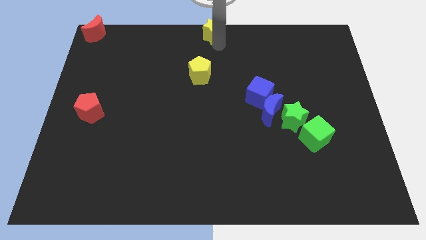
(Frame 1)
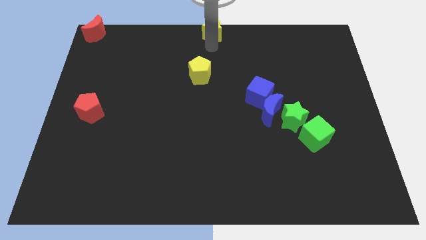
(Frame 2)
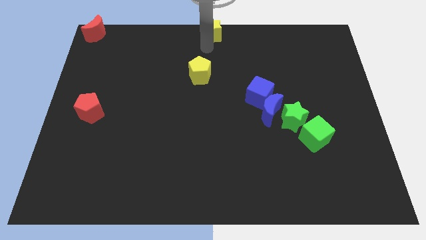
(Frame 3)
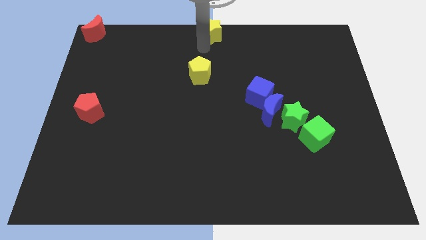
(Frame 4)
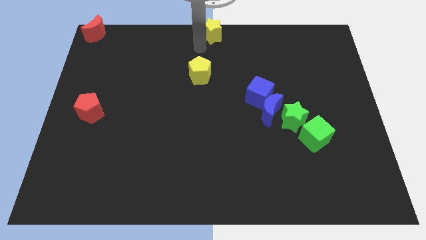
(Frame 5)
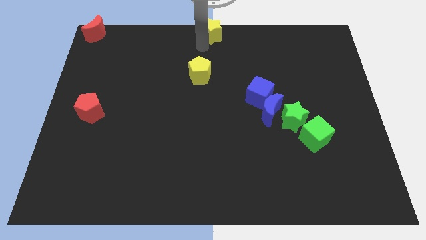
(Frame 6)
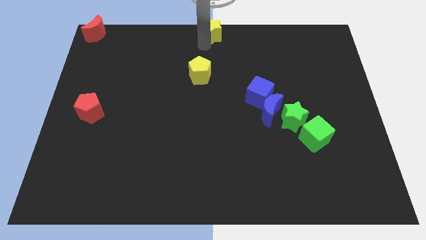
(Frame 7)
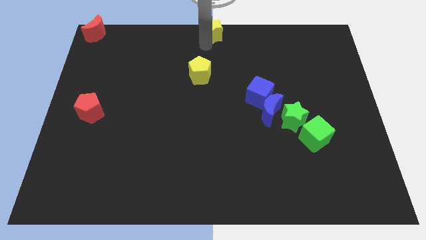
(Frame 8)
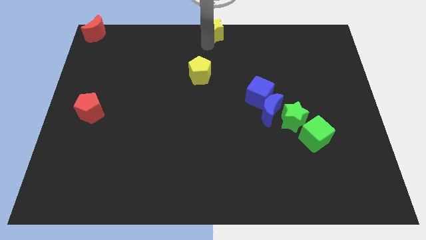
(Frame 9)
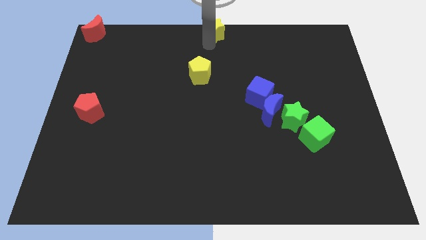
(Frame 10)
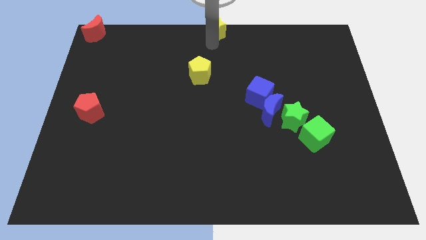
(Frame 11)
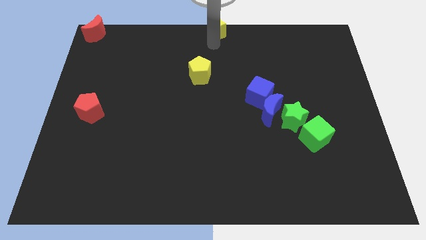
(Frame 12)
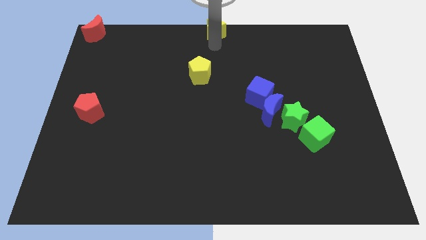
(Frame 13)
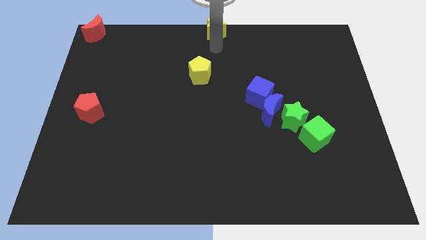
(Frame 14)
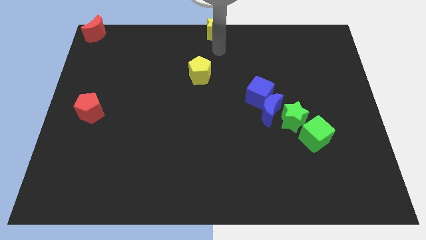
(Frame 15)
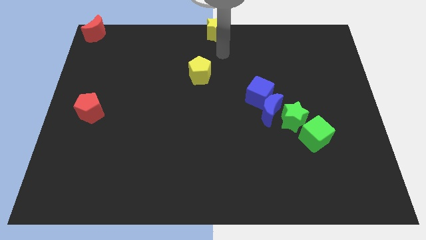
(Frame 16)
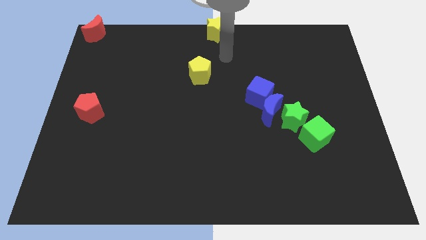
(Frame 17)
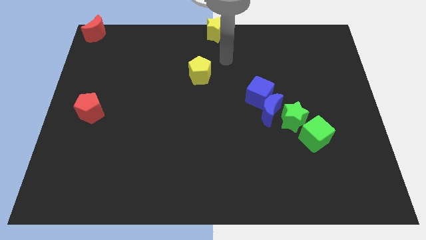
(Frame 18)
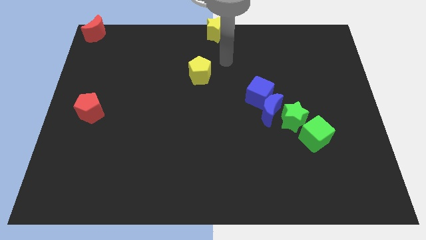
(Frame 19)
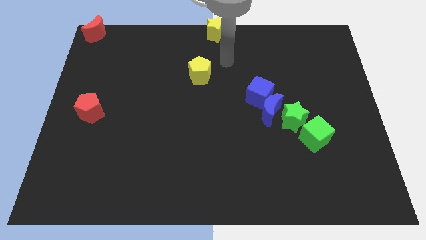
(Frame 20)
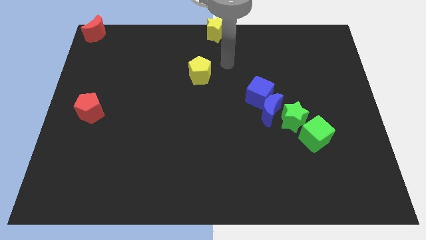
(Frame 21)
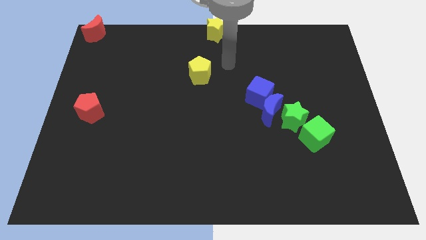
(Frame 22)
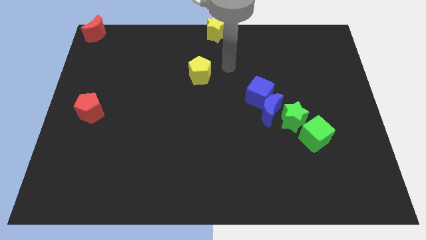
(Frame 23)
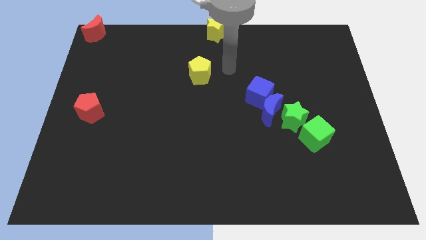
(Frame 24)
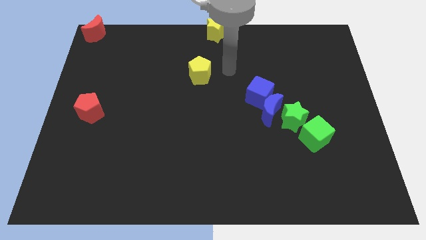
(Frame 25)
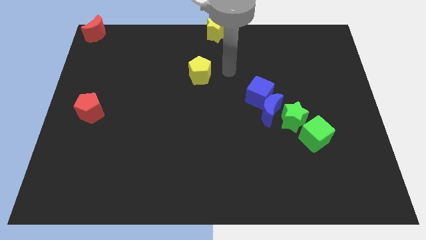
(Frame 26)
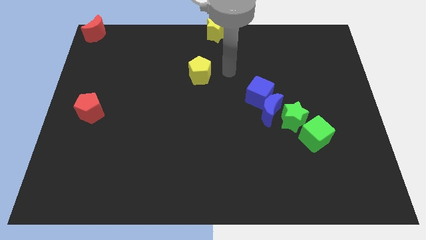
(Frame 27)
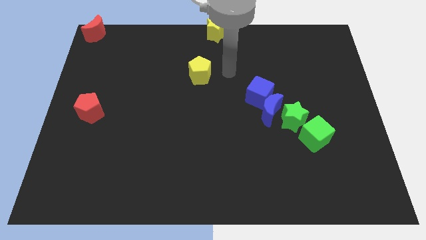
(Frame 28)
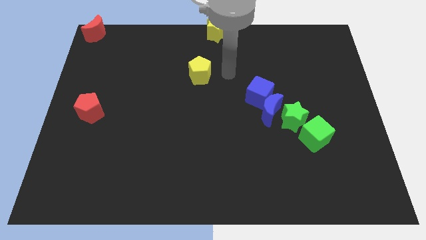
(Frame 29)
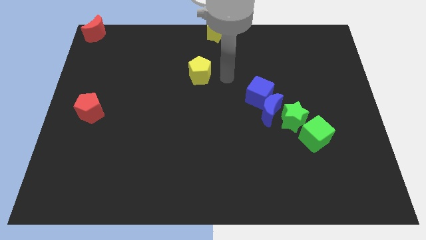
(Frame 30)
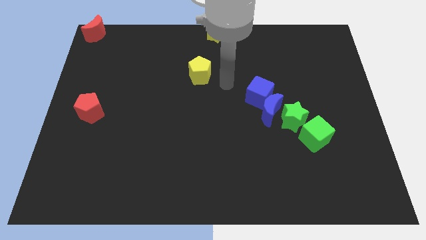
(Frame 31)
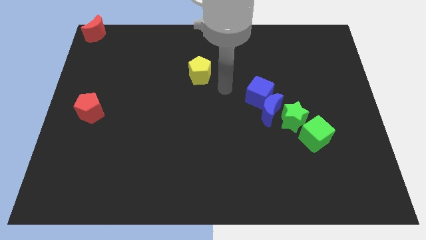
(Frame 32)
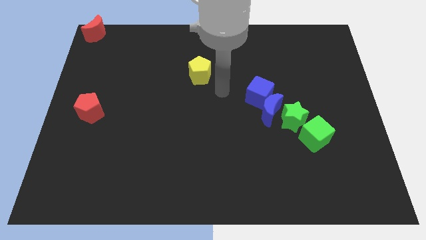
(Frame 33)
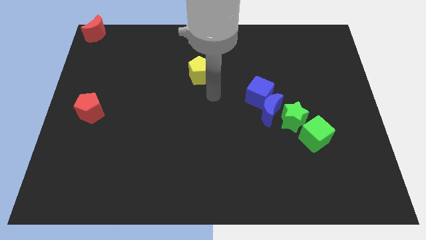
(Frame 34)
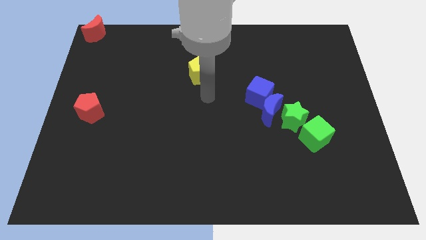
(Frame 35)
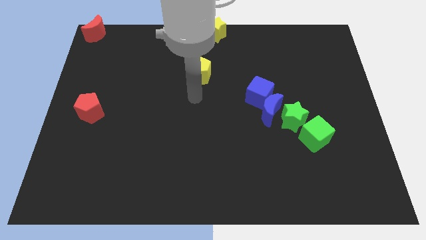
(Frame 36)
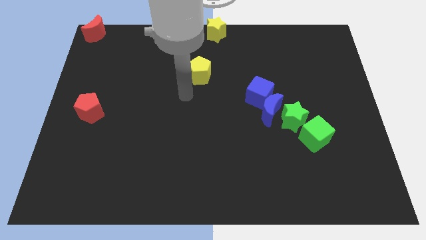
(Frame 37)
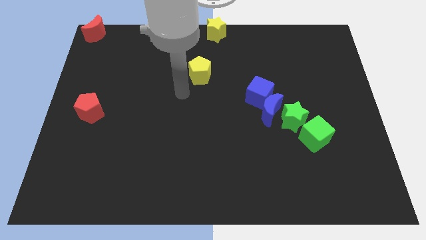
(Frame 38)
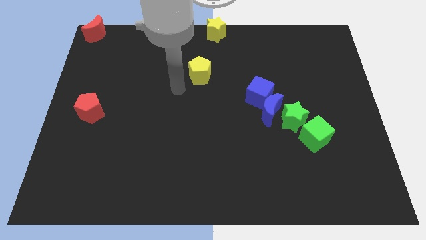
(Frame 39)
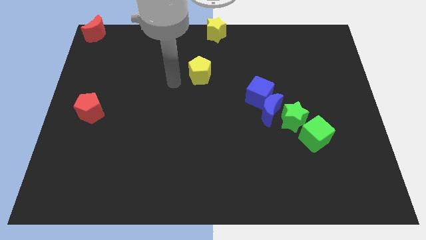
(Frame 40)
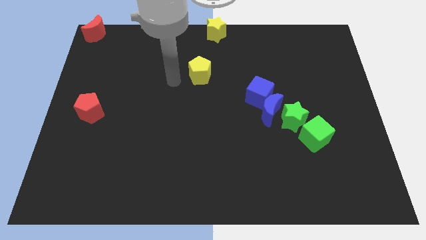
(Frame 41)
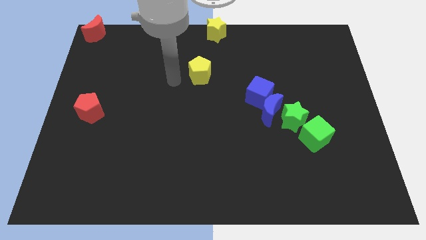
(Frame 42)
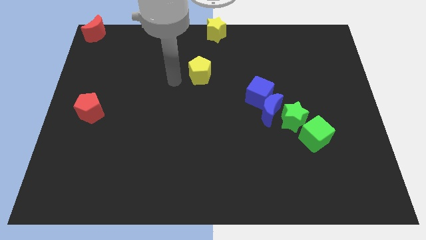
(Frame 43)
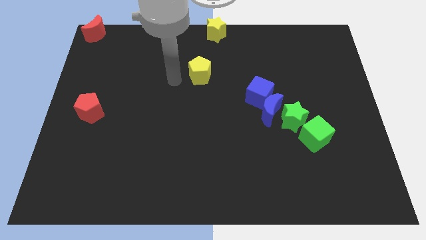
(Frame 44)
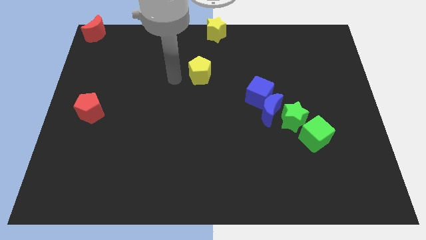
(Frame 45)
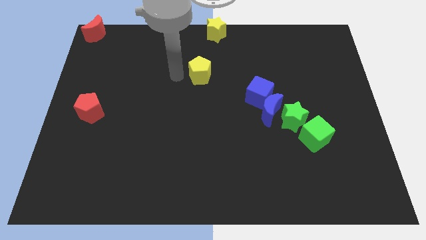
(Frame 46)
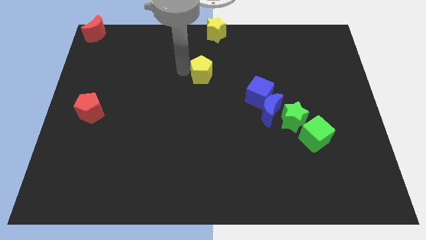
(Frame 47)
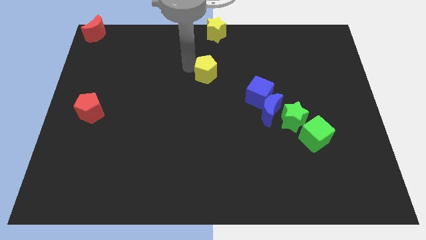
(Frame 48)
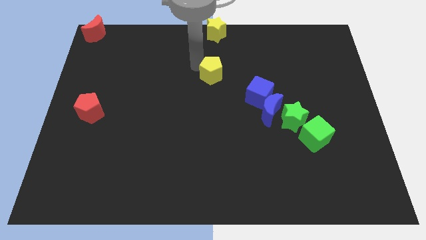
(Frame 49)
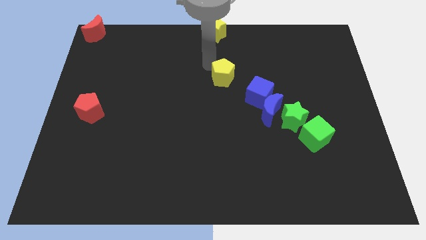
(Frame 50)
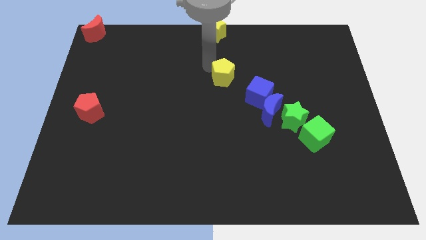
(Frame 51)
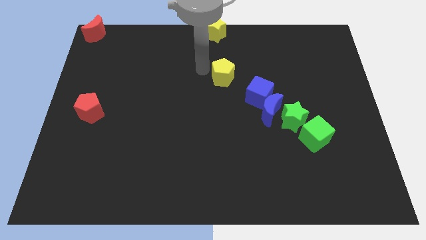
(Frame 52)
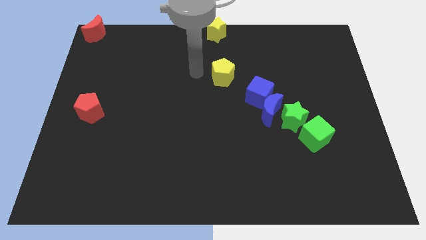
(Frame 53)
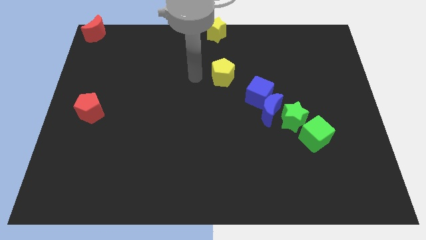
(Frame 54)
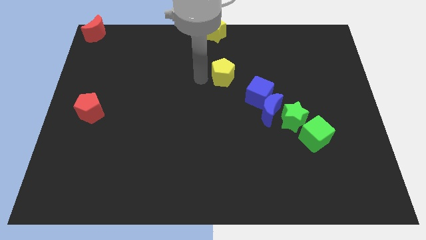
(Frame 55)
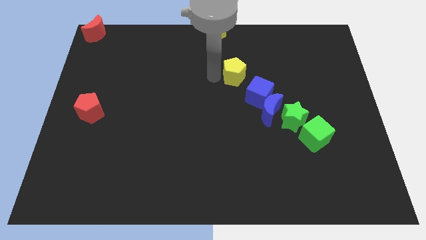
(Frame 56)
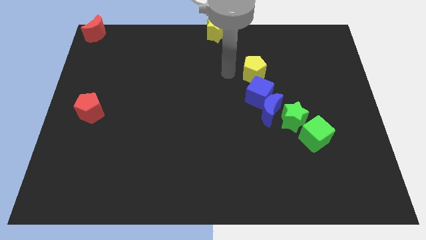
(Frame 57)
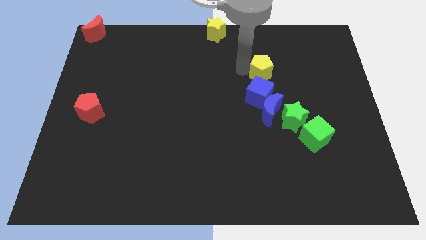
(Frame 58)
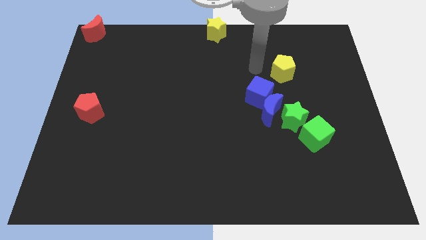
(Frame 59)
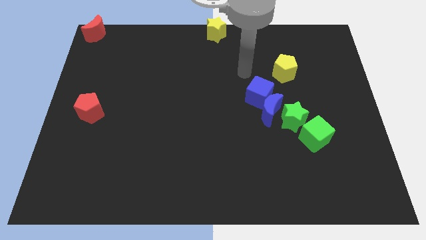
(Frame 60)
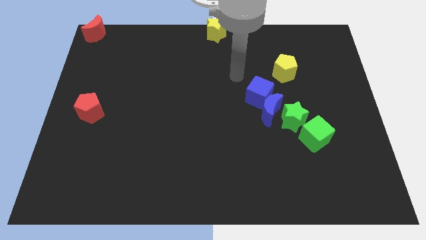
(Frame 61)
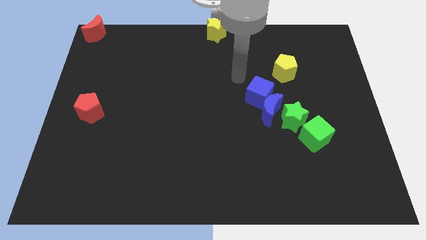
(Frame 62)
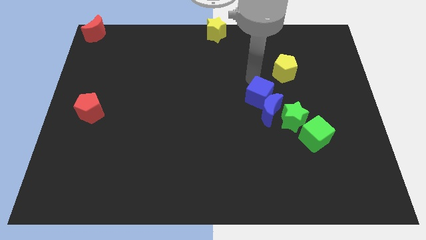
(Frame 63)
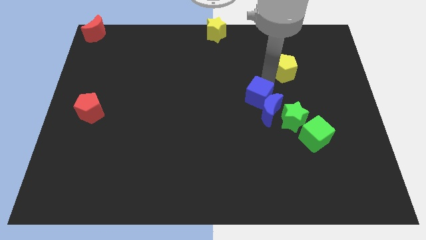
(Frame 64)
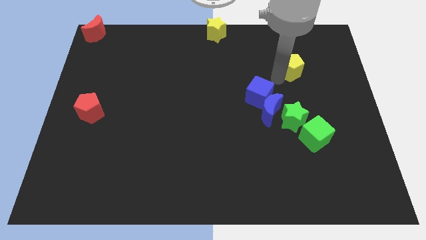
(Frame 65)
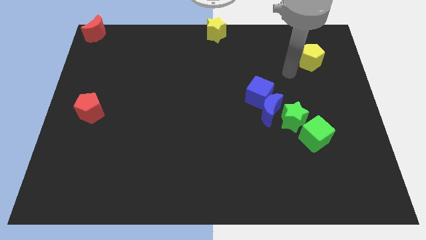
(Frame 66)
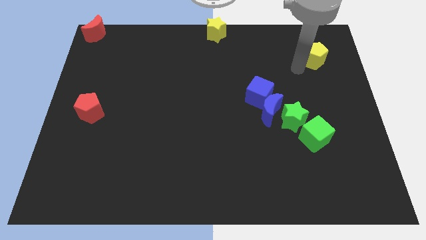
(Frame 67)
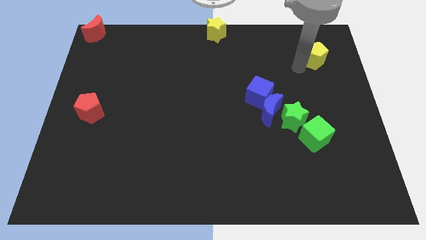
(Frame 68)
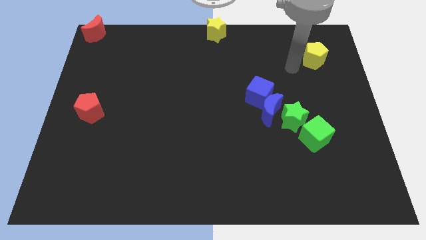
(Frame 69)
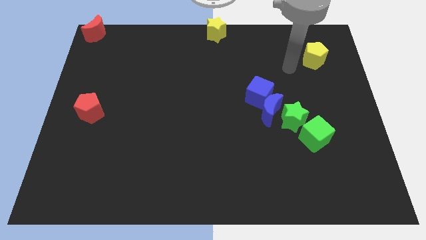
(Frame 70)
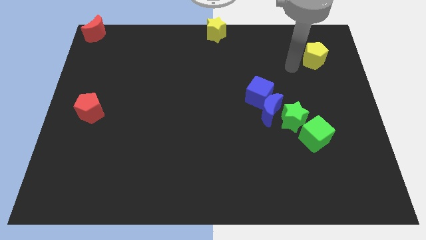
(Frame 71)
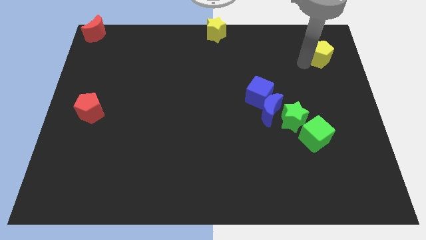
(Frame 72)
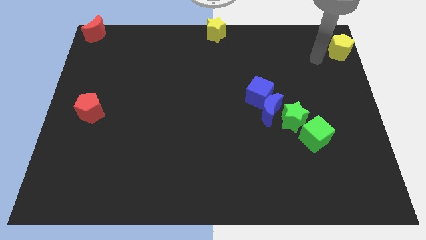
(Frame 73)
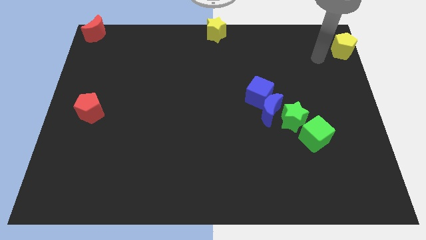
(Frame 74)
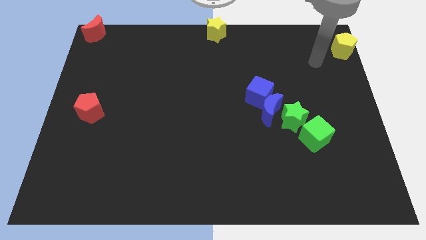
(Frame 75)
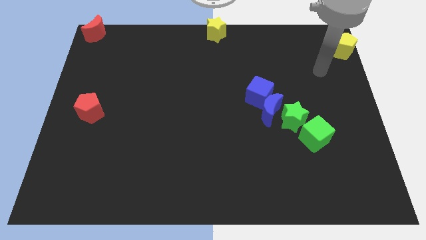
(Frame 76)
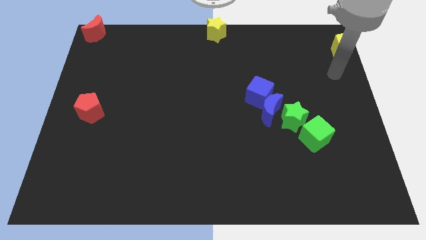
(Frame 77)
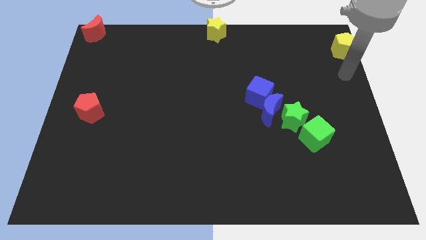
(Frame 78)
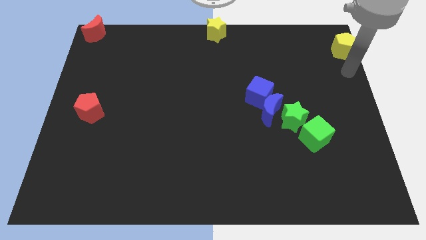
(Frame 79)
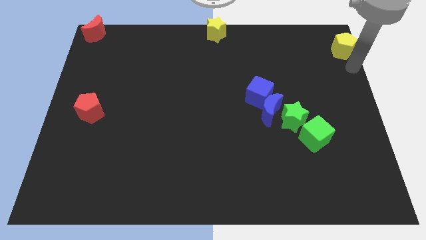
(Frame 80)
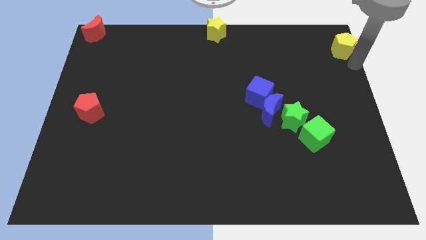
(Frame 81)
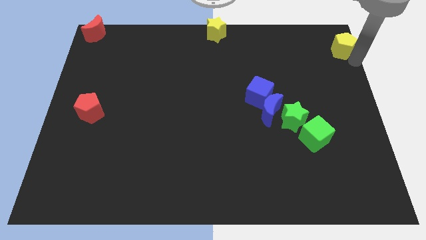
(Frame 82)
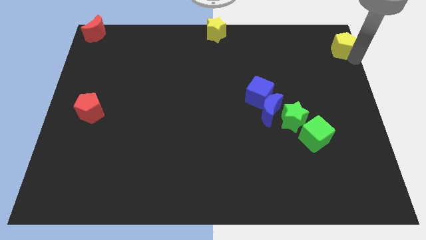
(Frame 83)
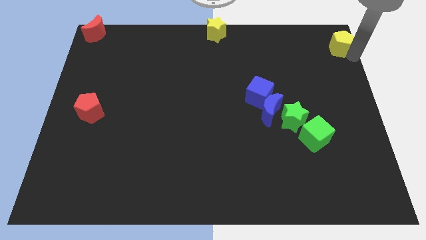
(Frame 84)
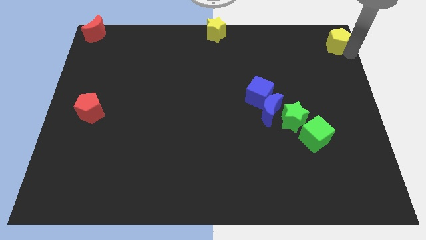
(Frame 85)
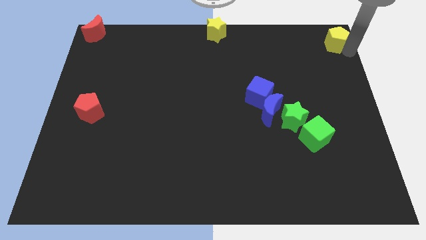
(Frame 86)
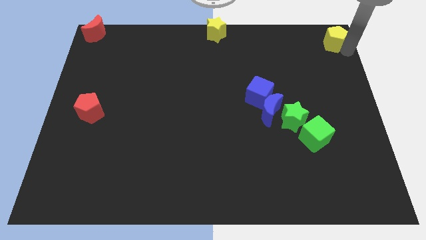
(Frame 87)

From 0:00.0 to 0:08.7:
move the yellow pentagon to the top left of the board

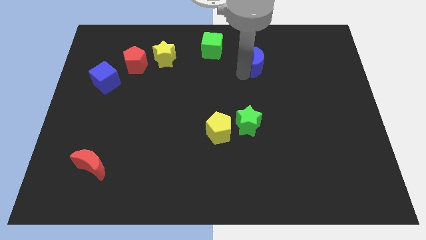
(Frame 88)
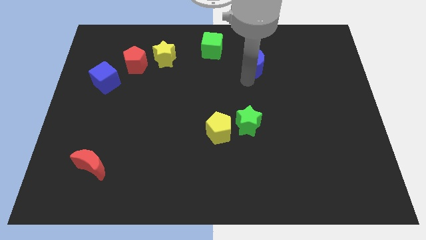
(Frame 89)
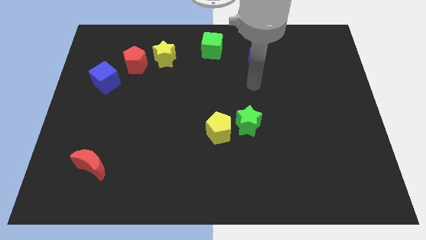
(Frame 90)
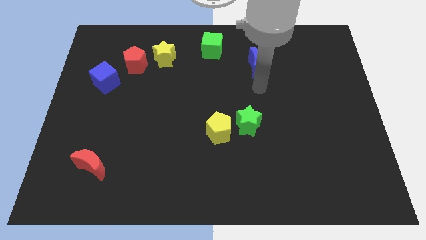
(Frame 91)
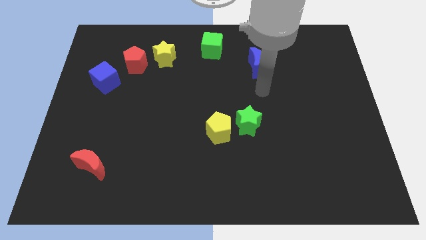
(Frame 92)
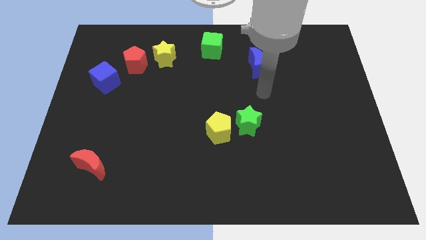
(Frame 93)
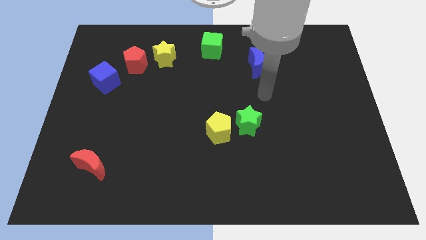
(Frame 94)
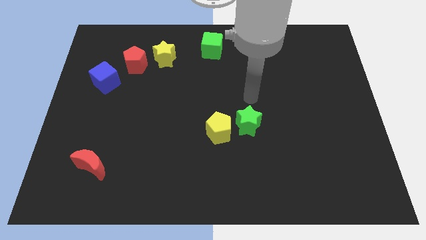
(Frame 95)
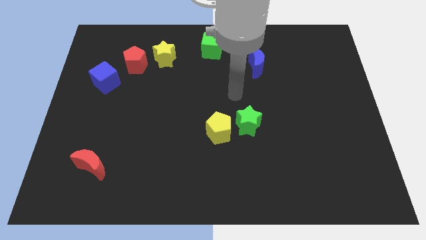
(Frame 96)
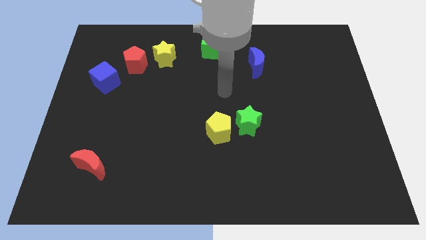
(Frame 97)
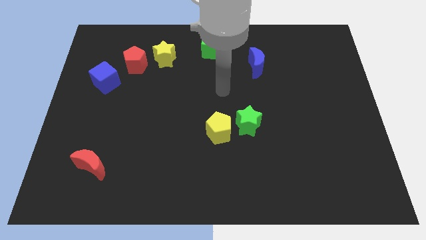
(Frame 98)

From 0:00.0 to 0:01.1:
put your hand vertically above the yellow pentagon
